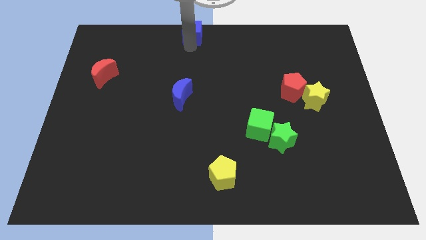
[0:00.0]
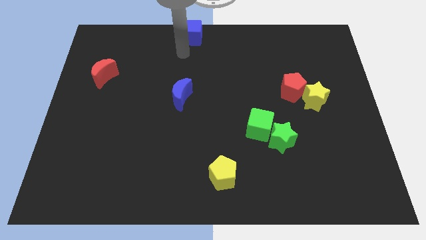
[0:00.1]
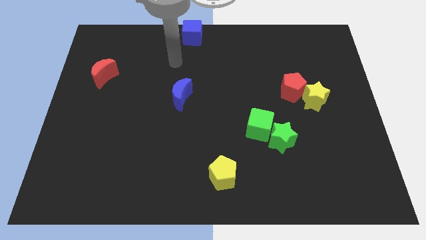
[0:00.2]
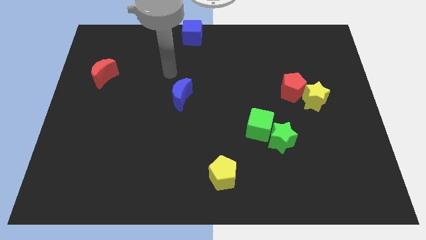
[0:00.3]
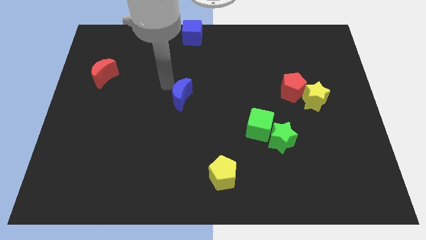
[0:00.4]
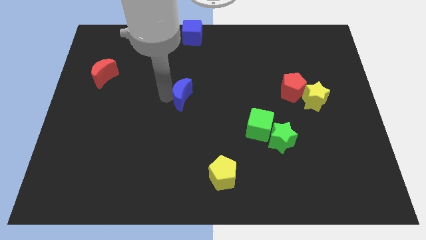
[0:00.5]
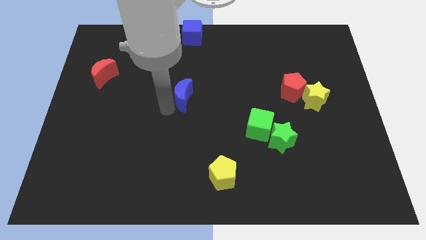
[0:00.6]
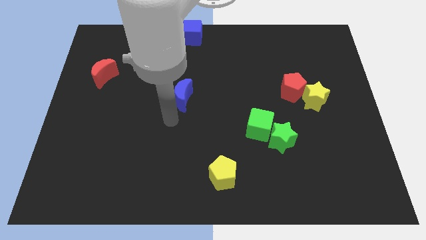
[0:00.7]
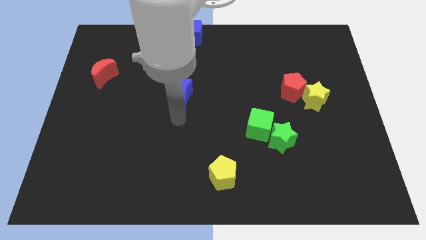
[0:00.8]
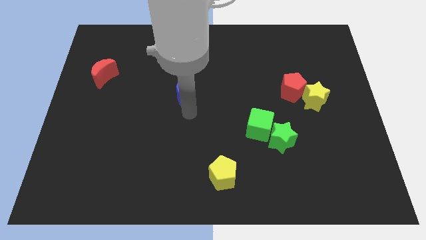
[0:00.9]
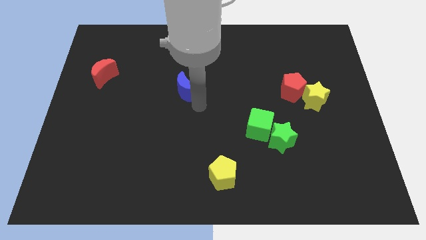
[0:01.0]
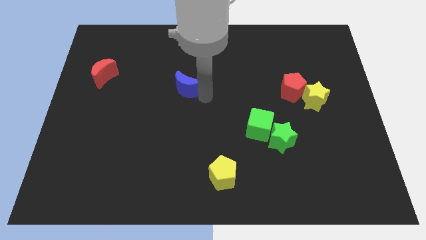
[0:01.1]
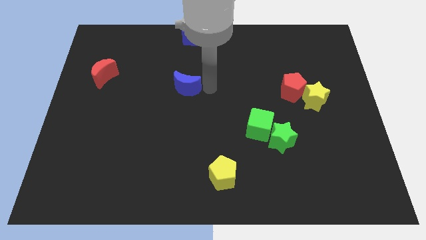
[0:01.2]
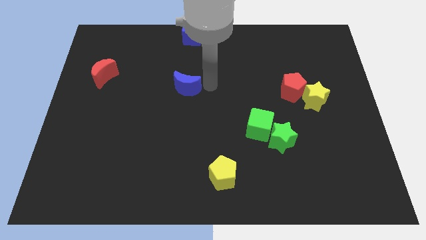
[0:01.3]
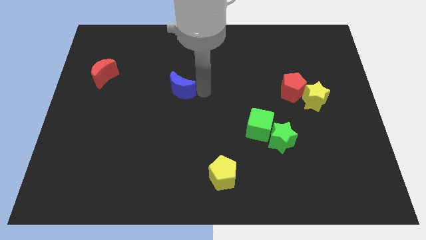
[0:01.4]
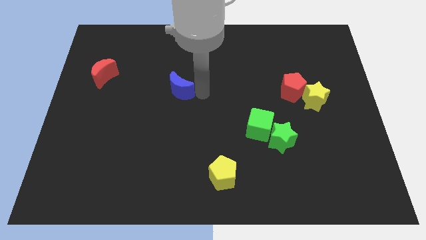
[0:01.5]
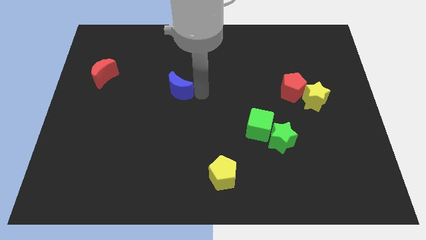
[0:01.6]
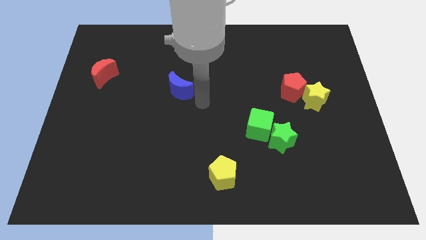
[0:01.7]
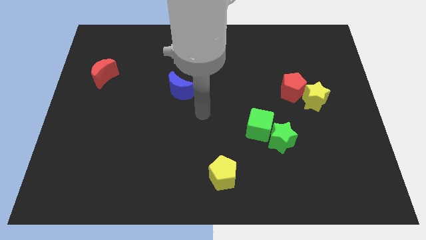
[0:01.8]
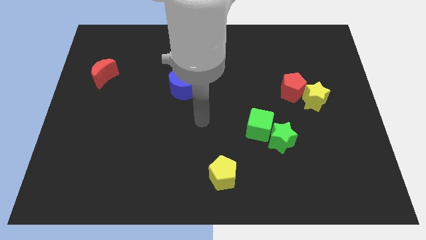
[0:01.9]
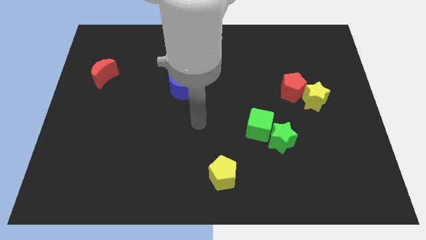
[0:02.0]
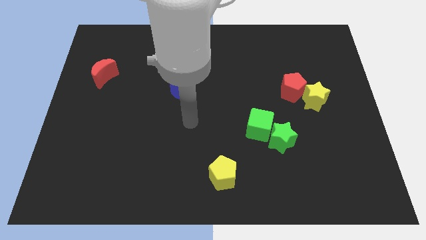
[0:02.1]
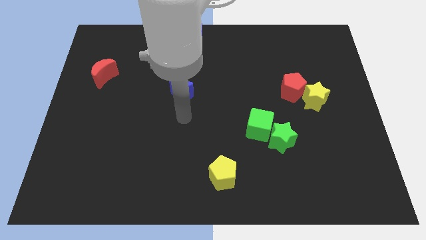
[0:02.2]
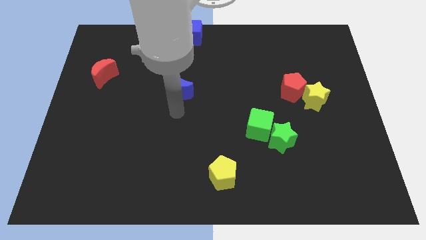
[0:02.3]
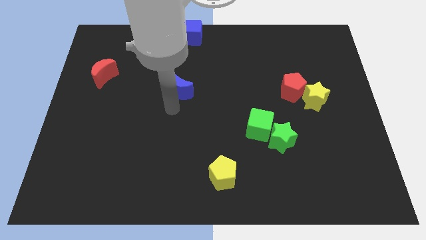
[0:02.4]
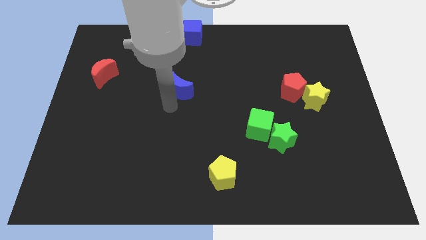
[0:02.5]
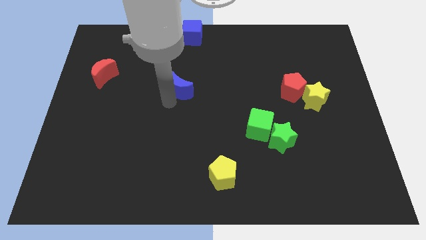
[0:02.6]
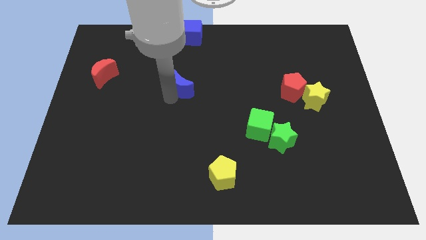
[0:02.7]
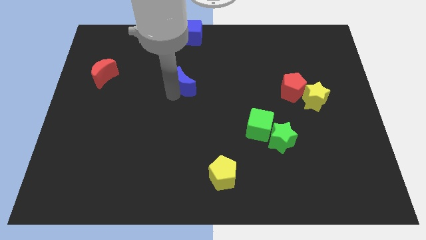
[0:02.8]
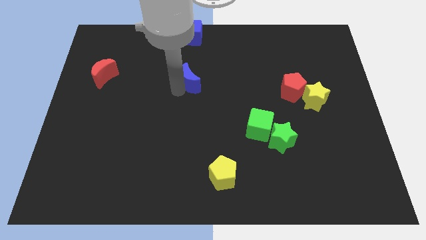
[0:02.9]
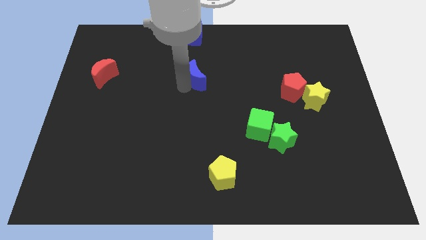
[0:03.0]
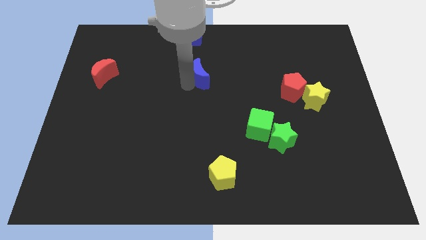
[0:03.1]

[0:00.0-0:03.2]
touch the bottom of blue crescent

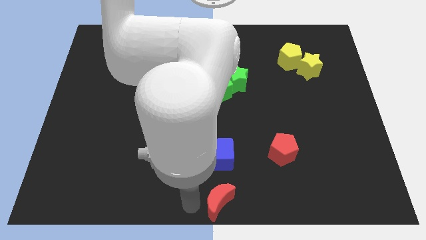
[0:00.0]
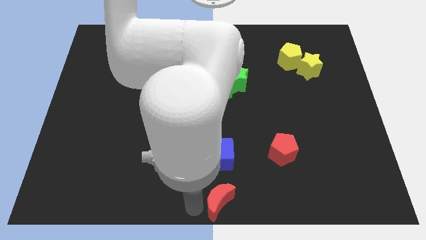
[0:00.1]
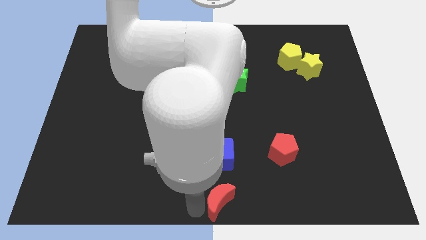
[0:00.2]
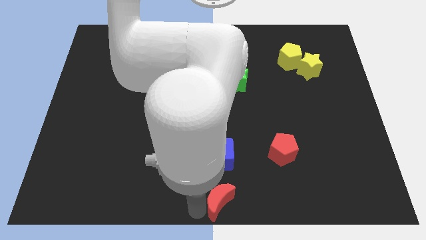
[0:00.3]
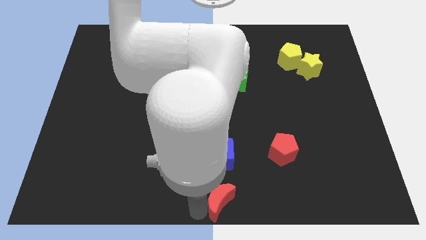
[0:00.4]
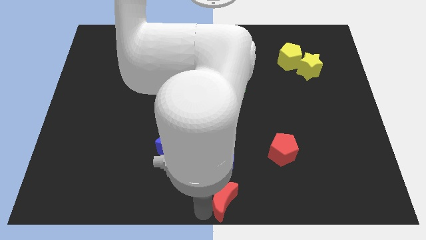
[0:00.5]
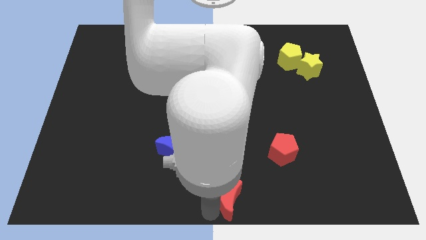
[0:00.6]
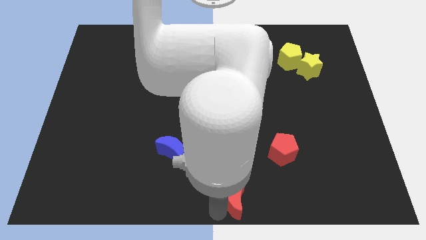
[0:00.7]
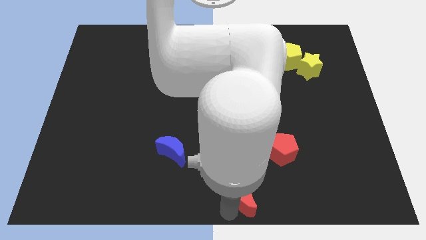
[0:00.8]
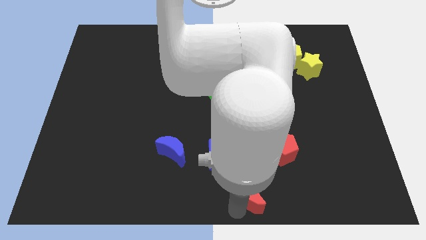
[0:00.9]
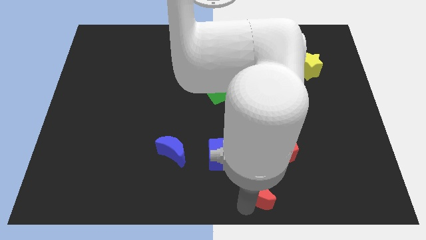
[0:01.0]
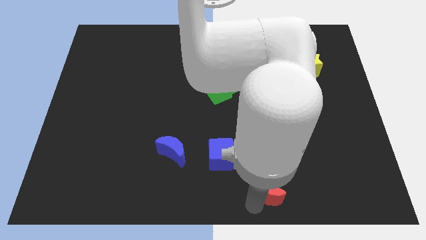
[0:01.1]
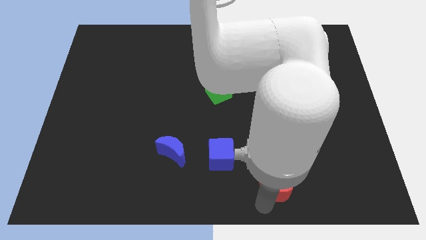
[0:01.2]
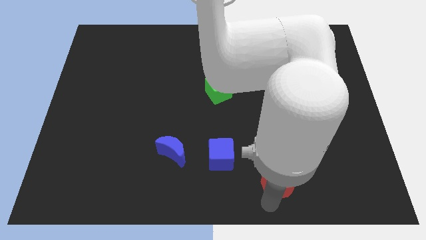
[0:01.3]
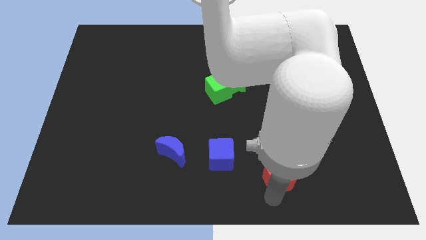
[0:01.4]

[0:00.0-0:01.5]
push the red moon to the bottom of red pentagon

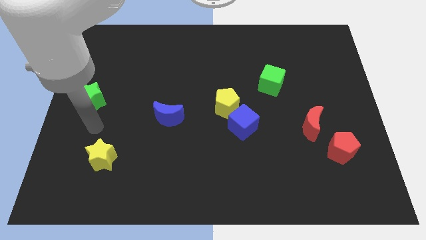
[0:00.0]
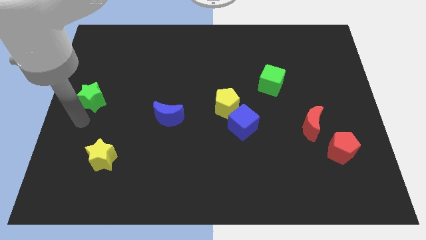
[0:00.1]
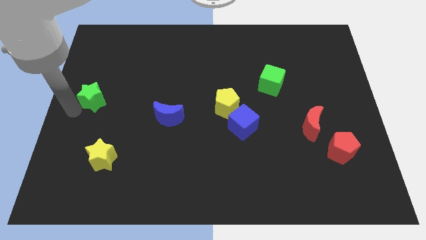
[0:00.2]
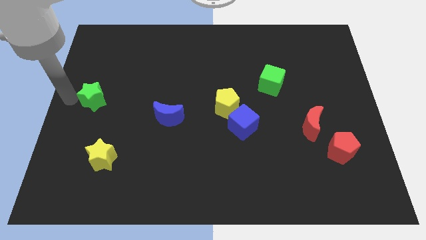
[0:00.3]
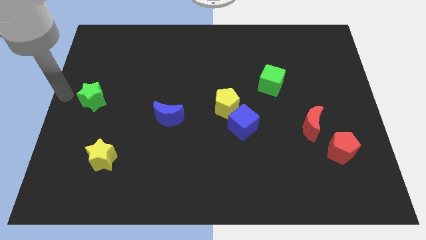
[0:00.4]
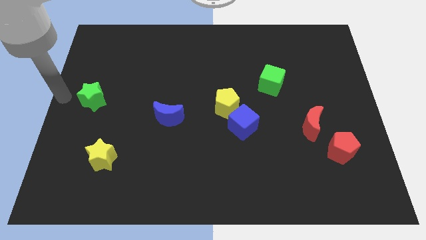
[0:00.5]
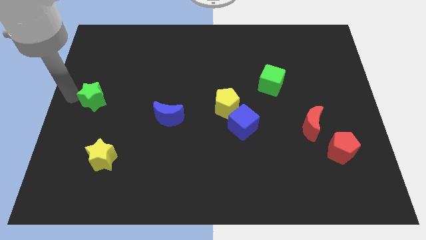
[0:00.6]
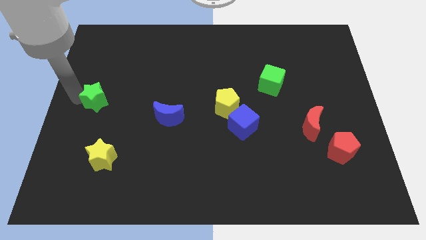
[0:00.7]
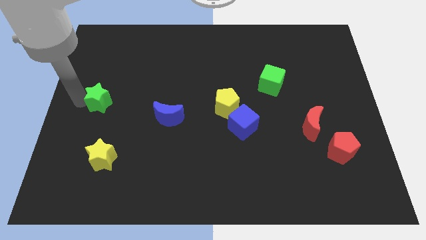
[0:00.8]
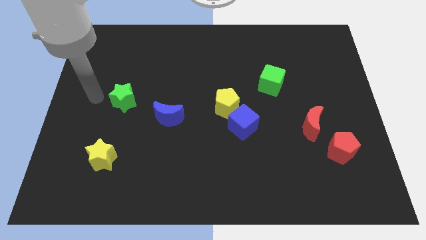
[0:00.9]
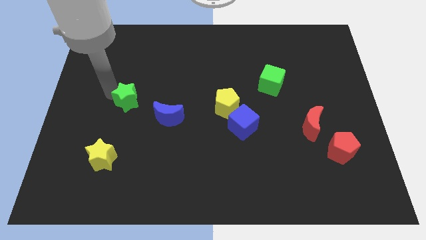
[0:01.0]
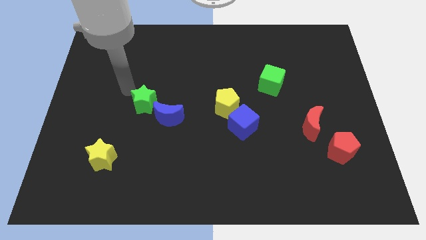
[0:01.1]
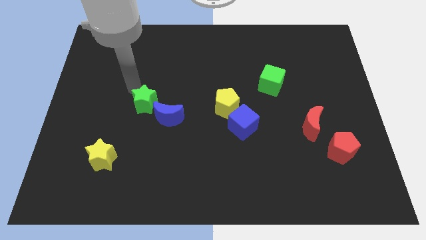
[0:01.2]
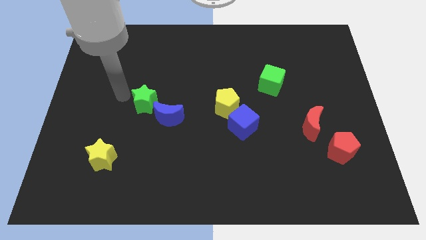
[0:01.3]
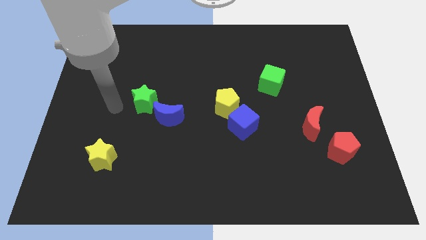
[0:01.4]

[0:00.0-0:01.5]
move the green star close to the blue crescent

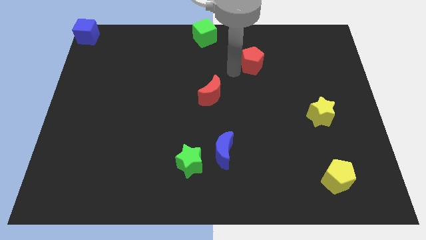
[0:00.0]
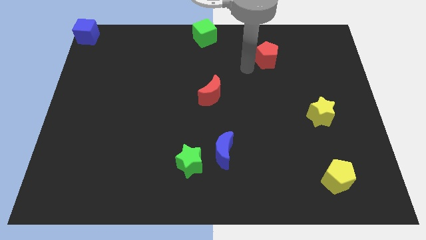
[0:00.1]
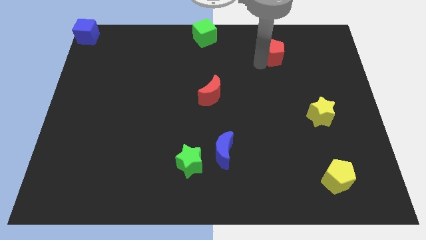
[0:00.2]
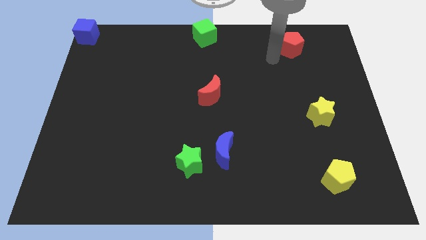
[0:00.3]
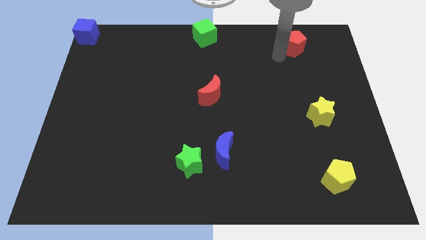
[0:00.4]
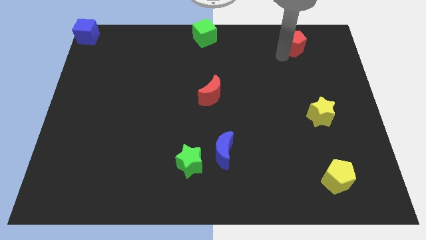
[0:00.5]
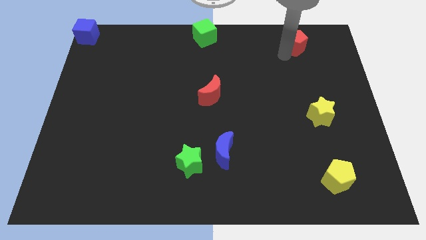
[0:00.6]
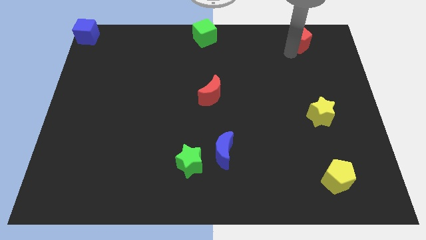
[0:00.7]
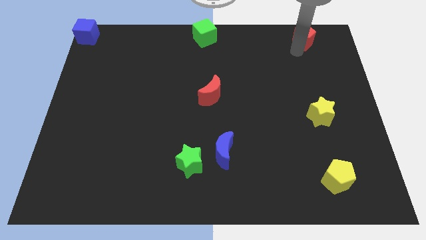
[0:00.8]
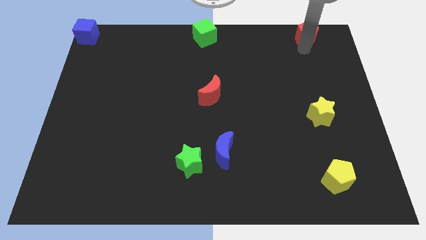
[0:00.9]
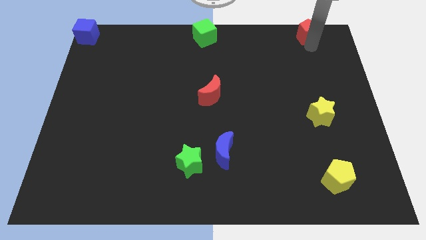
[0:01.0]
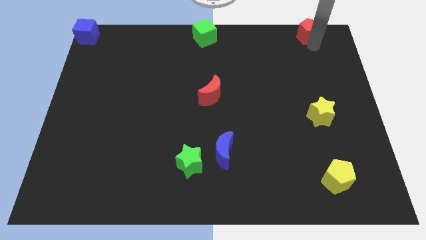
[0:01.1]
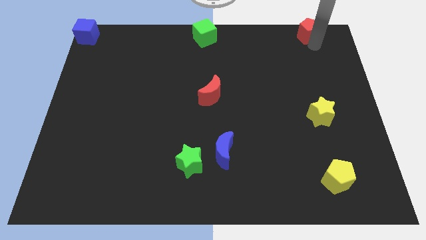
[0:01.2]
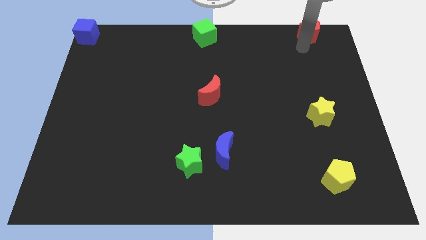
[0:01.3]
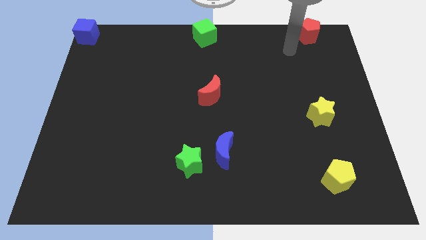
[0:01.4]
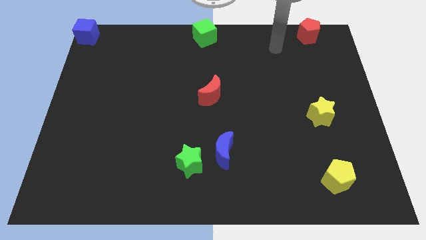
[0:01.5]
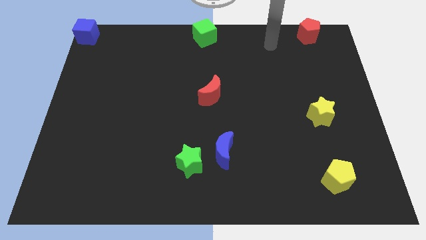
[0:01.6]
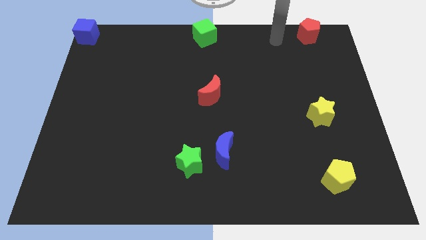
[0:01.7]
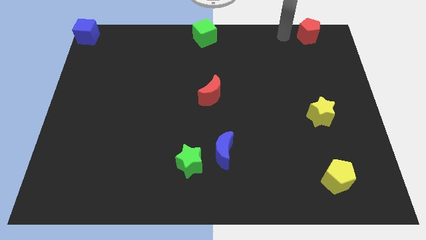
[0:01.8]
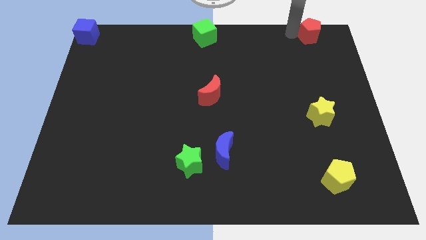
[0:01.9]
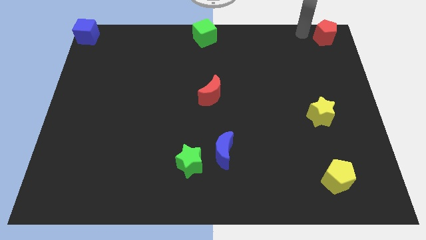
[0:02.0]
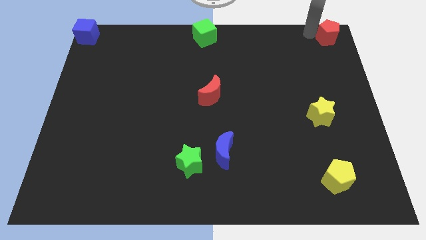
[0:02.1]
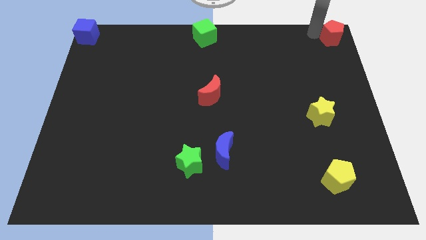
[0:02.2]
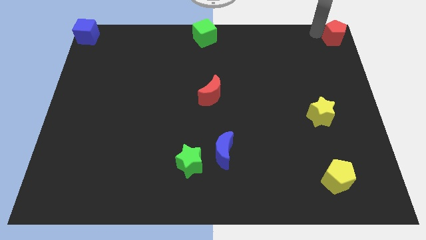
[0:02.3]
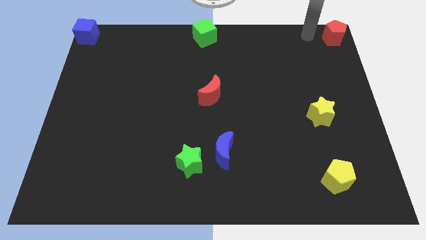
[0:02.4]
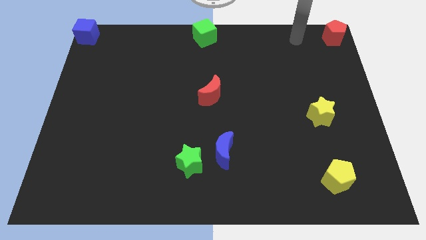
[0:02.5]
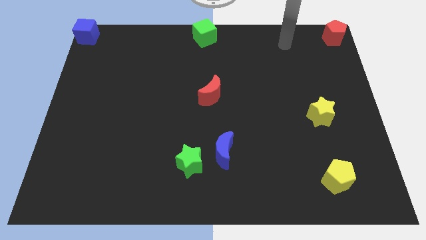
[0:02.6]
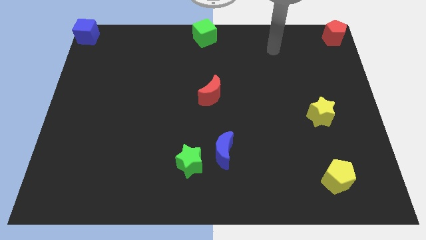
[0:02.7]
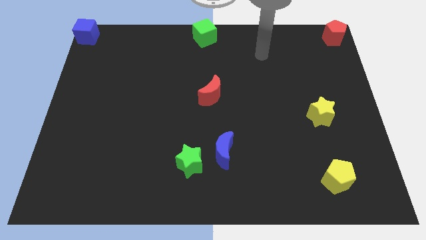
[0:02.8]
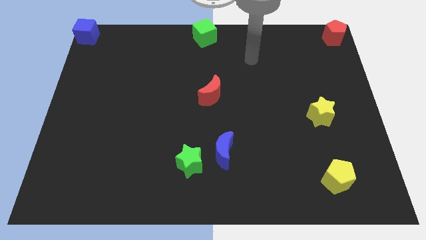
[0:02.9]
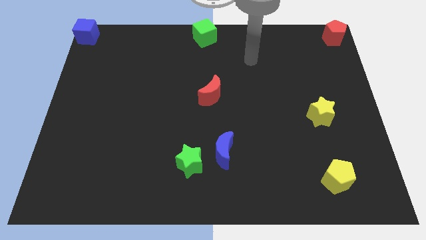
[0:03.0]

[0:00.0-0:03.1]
slide red pentagon to the top right
